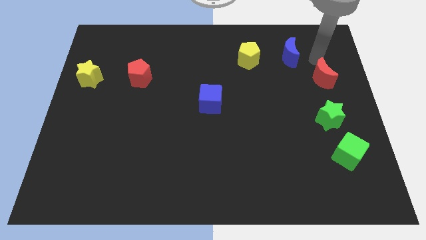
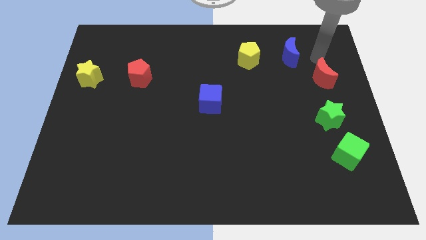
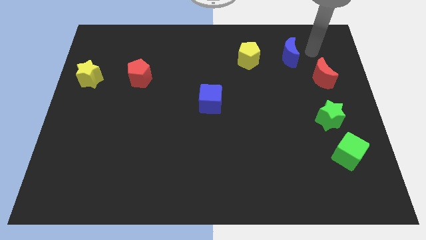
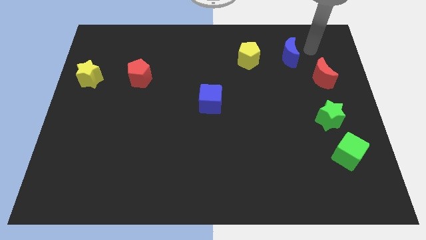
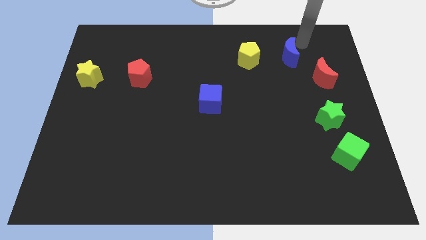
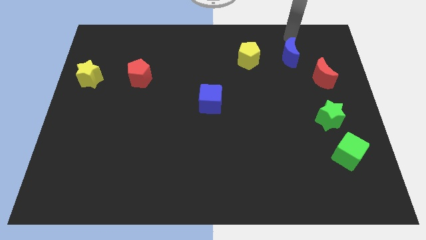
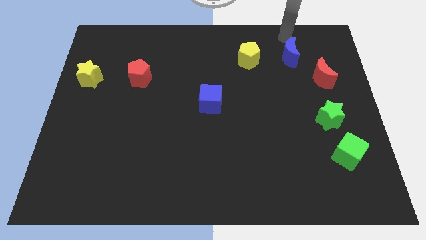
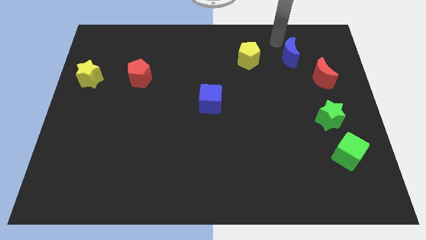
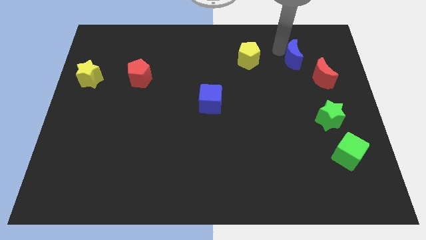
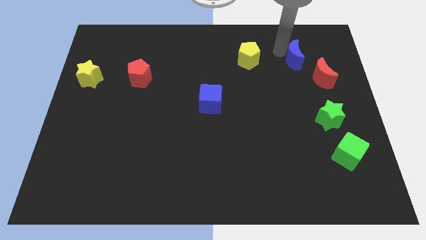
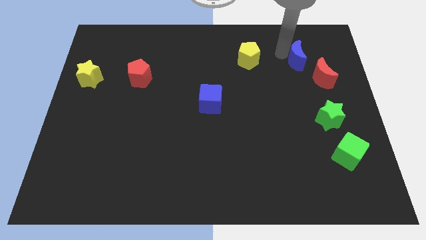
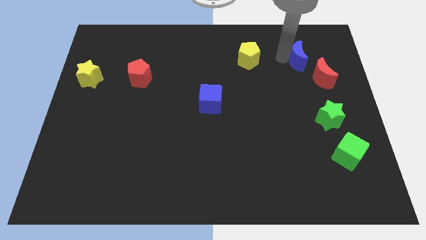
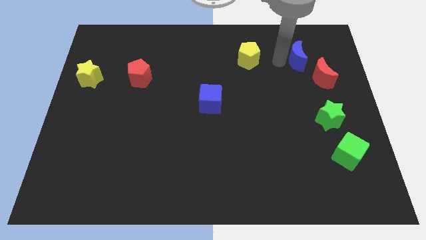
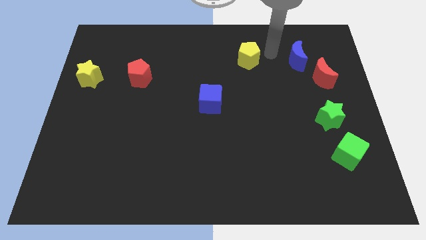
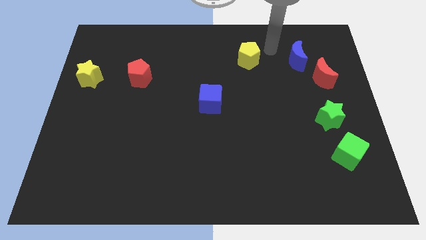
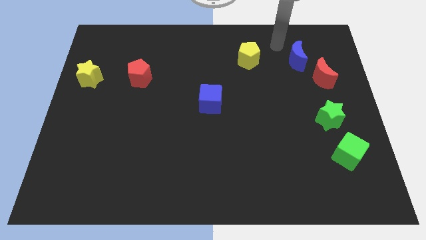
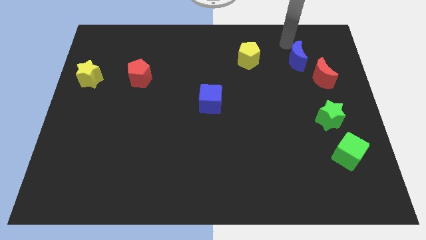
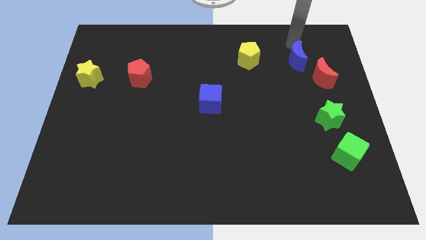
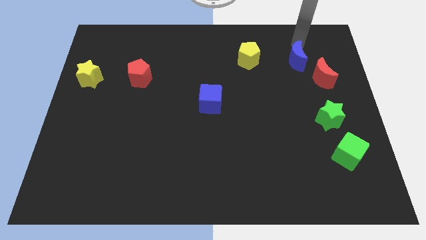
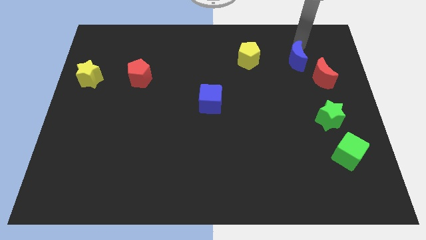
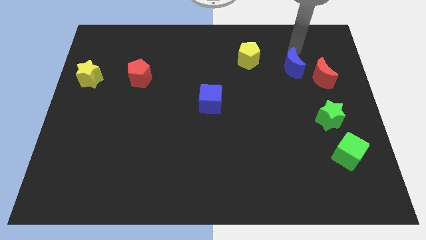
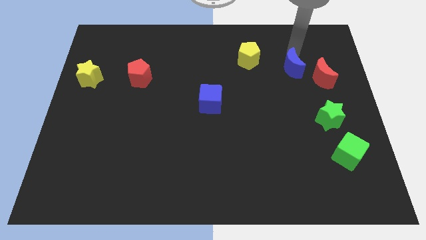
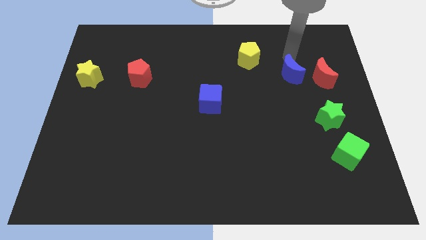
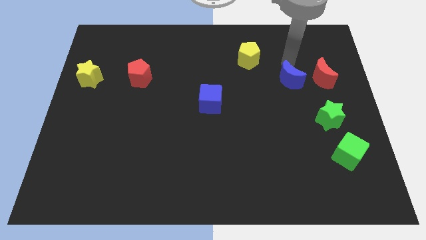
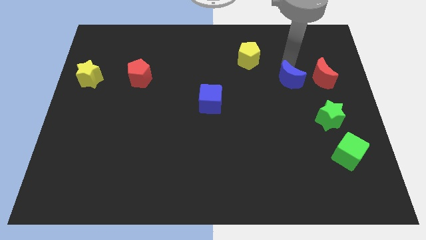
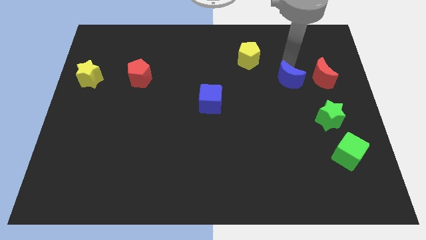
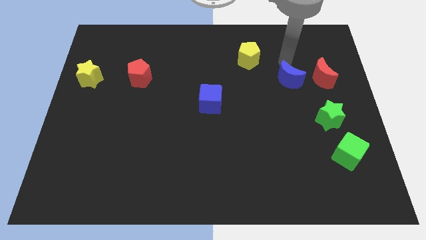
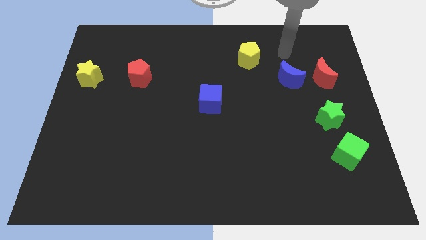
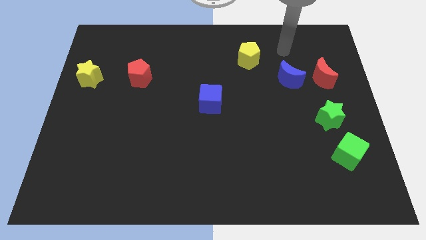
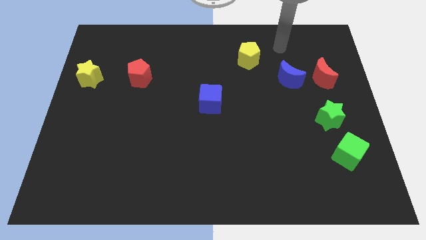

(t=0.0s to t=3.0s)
place the blue crescent to the left side of red crescent

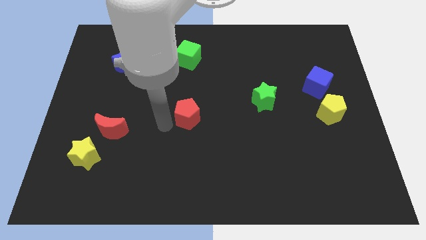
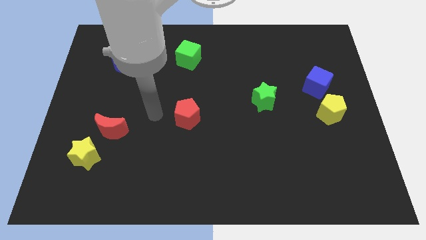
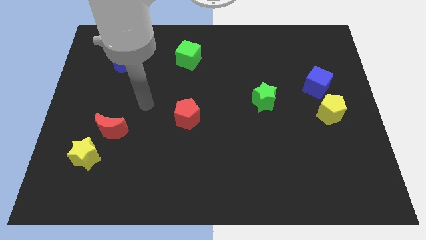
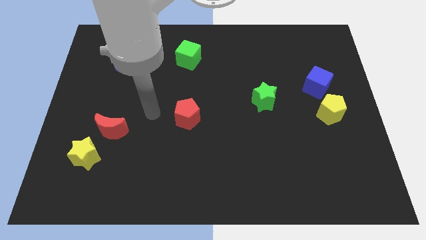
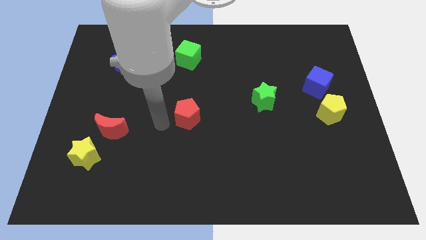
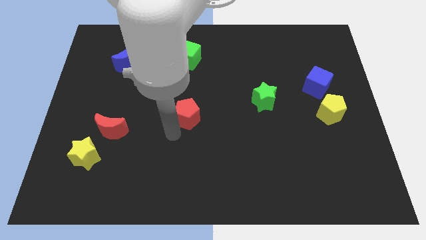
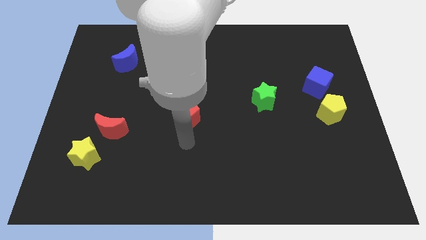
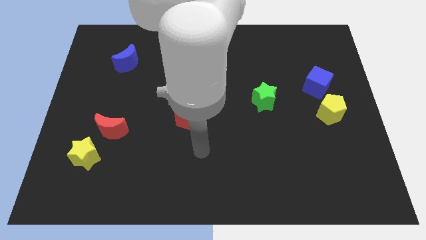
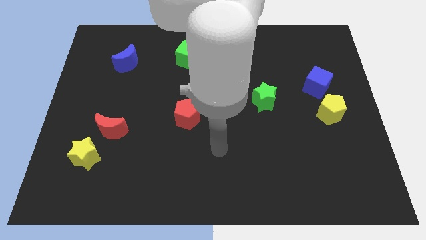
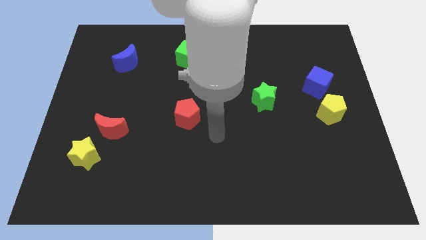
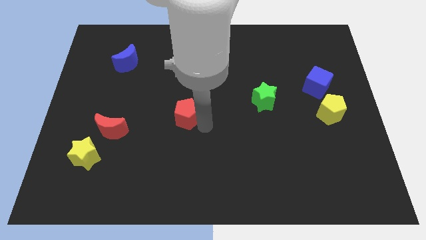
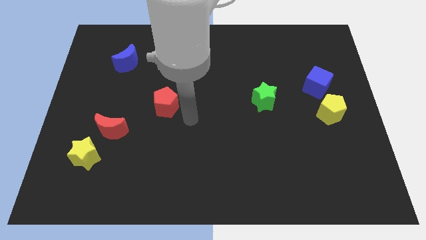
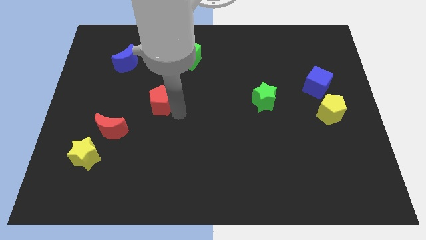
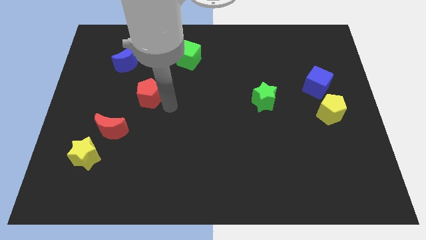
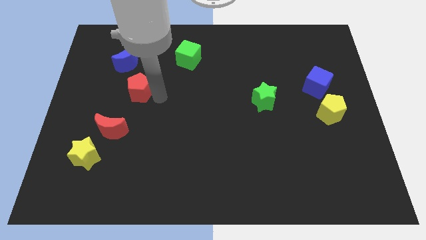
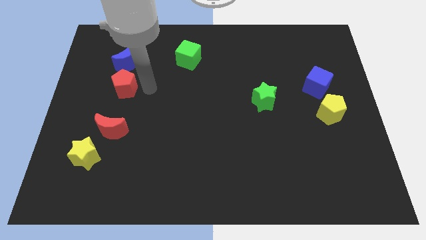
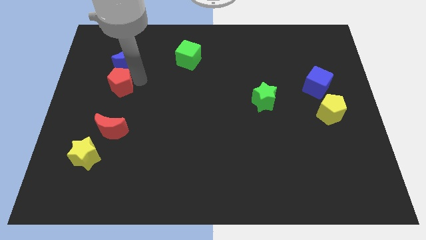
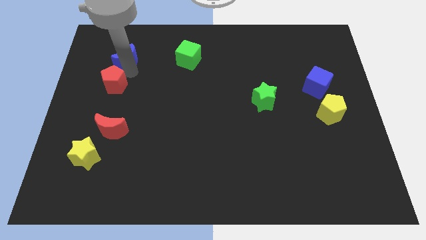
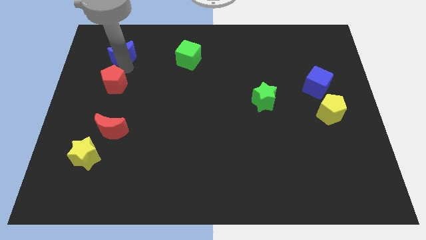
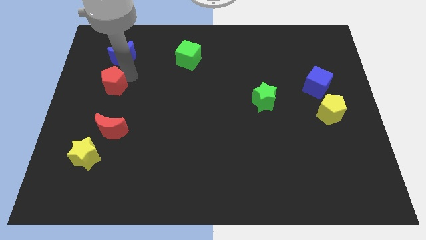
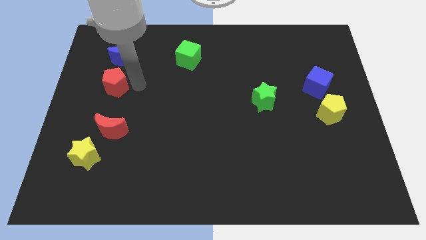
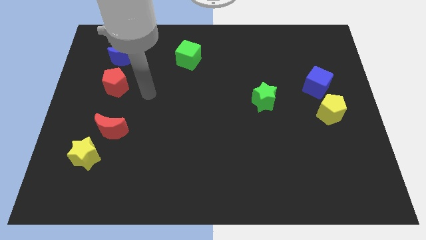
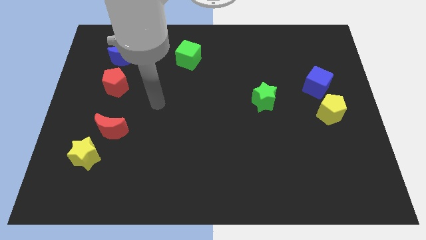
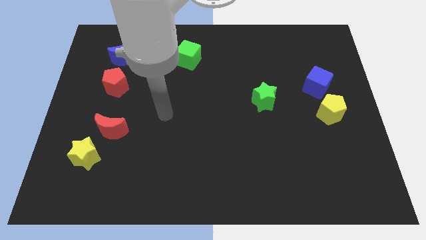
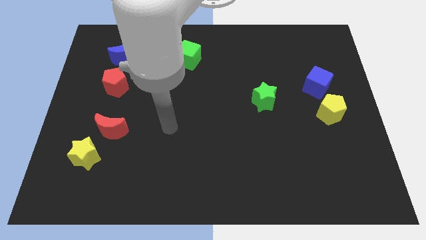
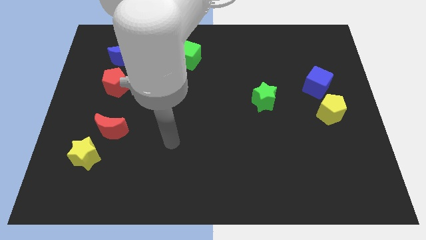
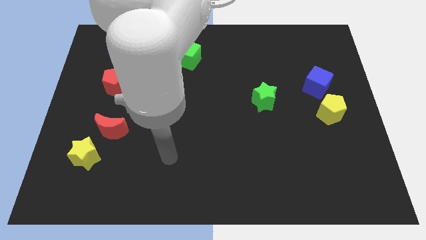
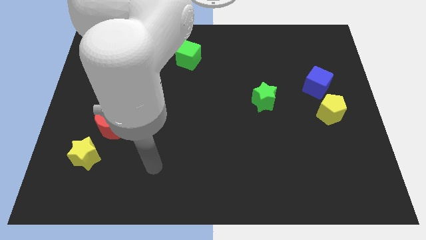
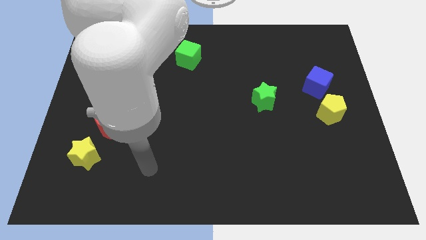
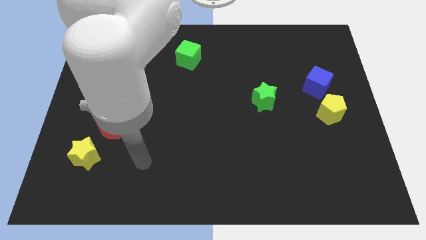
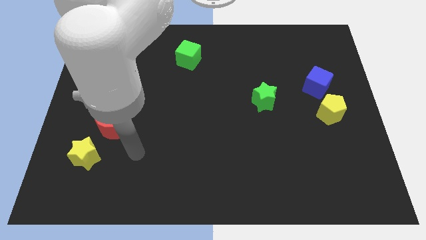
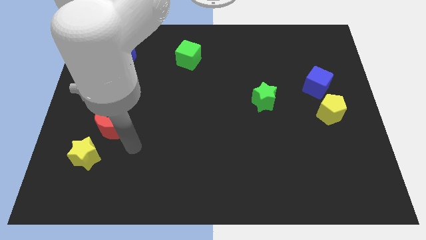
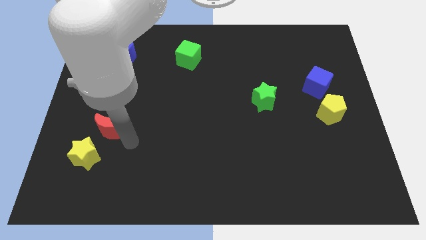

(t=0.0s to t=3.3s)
move the red pentagon below to the blue moon

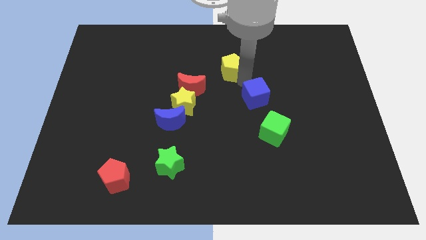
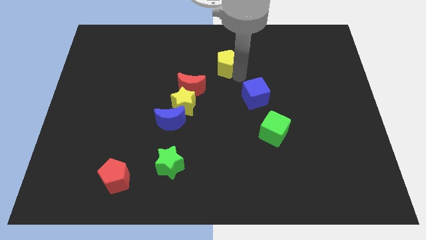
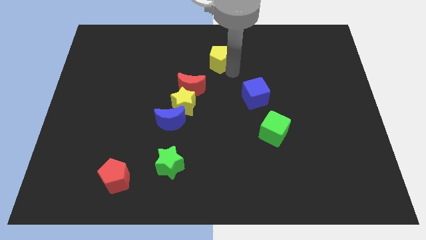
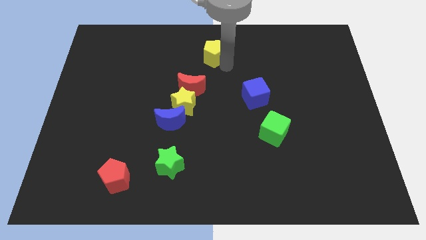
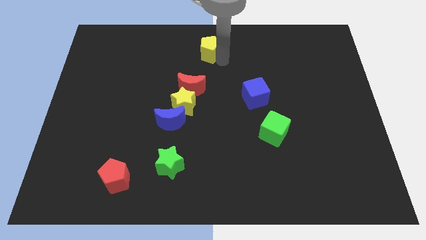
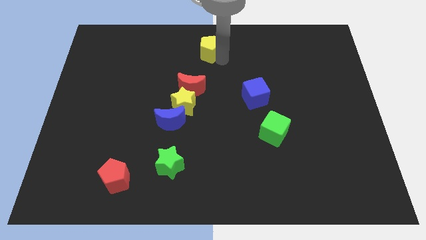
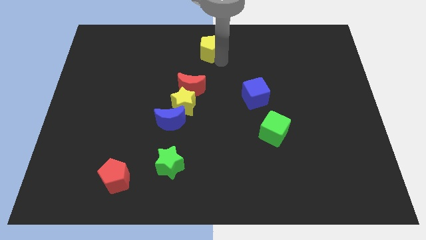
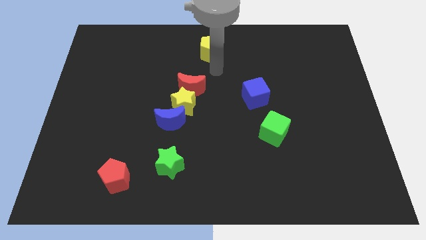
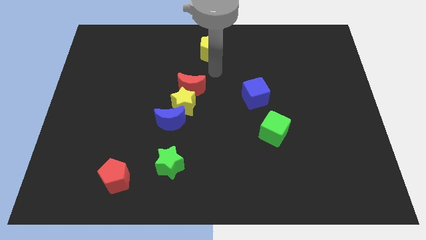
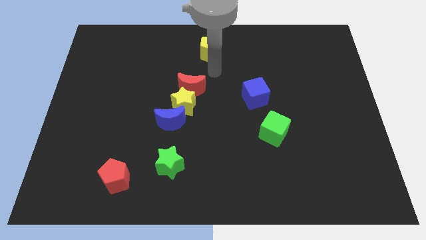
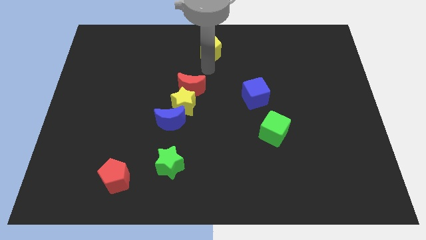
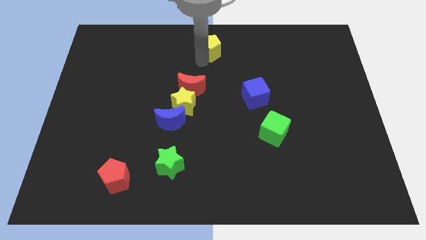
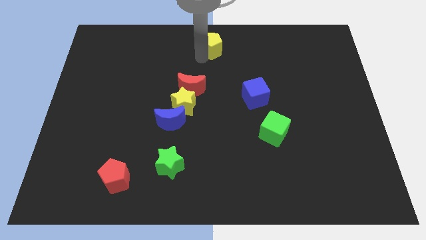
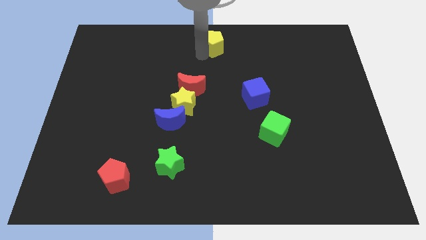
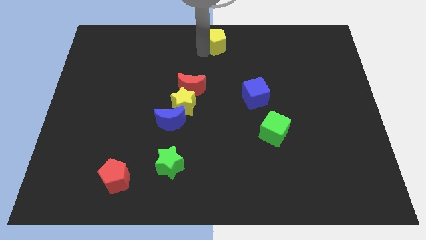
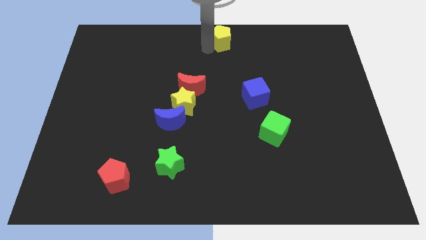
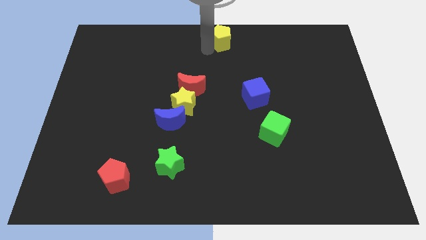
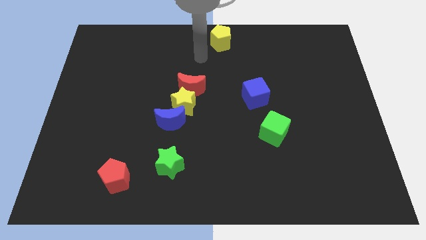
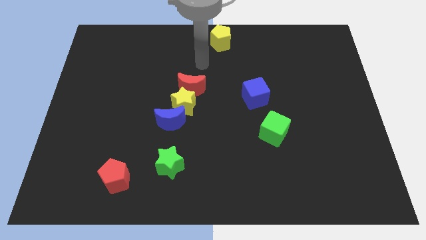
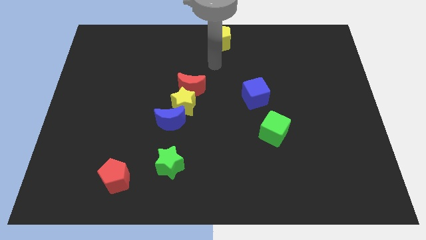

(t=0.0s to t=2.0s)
place the yellow pentagon at the top center of the board

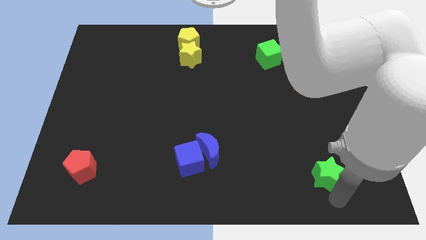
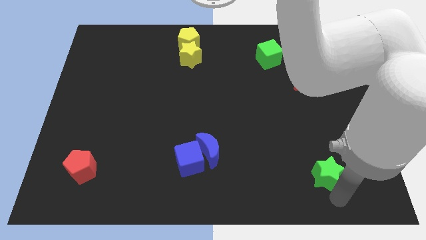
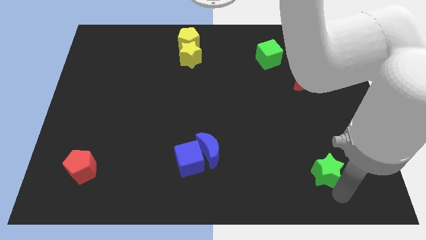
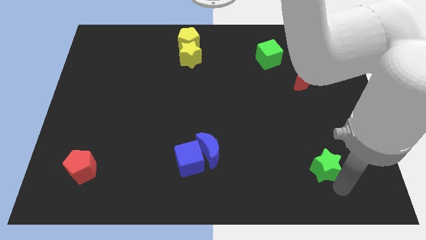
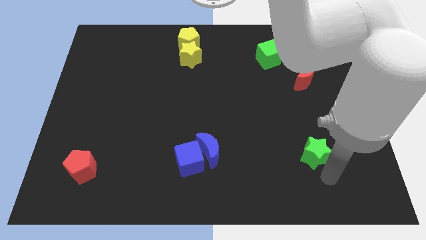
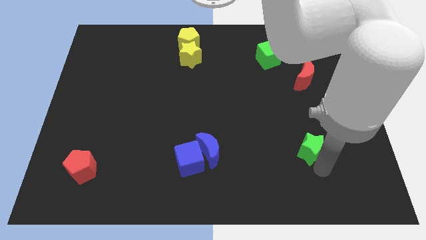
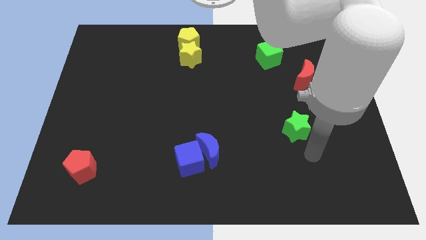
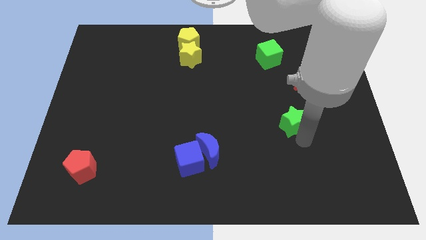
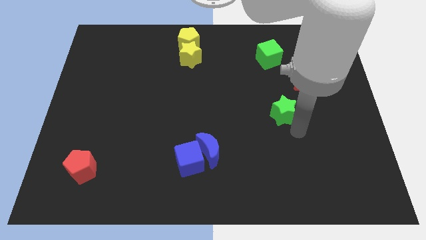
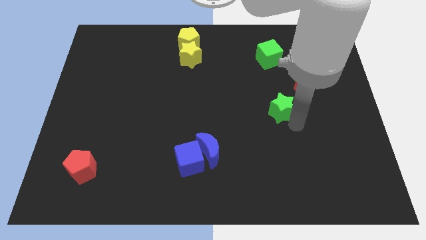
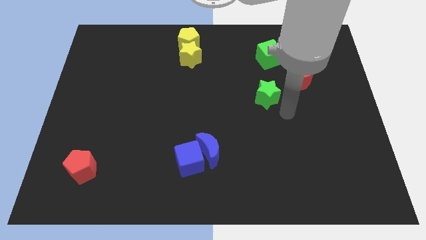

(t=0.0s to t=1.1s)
push the green star towards the top
